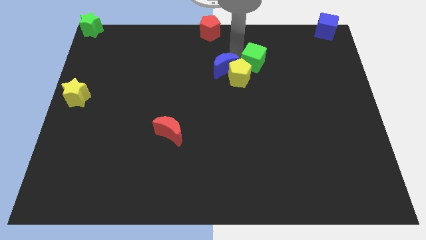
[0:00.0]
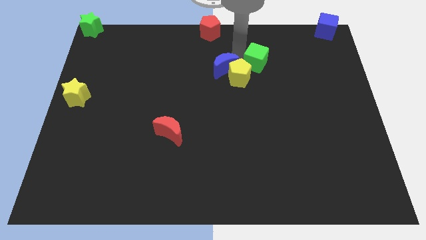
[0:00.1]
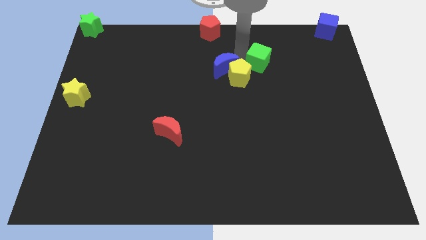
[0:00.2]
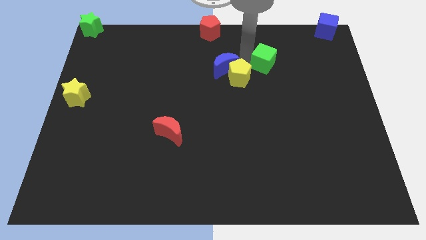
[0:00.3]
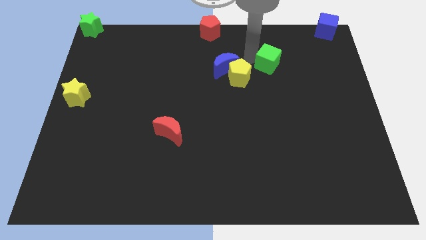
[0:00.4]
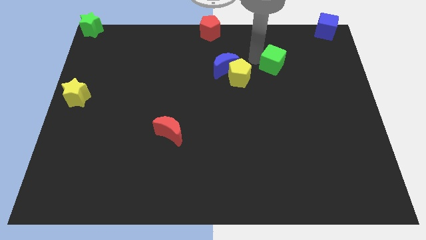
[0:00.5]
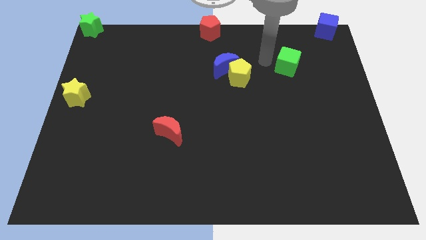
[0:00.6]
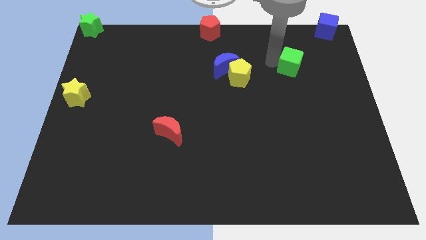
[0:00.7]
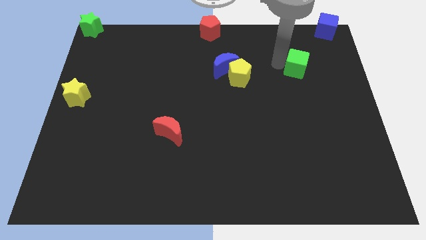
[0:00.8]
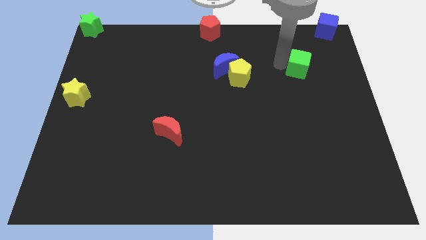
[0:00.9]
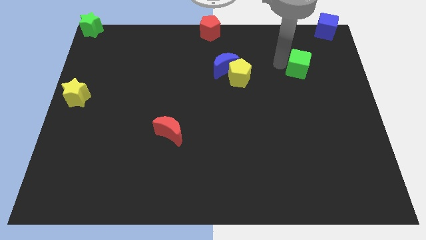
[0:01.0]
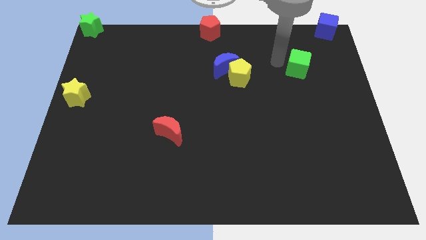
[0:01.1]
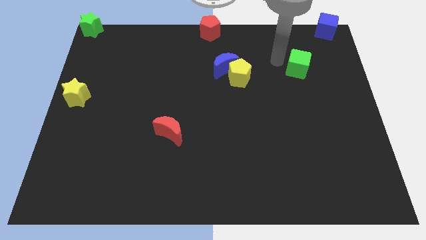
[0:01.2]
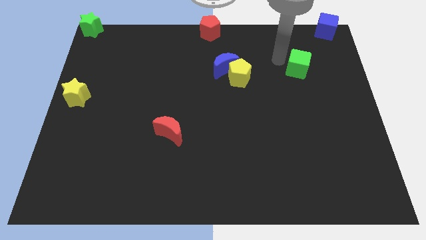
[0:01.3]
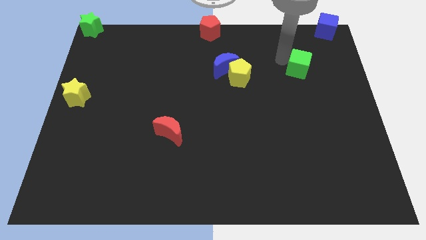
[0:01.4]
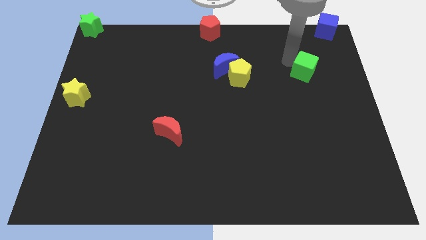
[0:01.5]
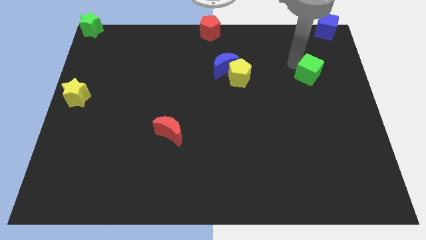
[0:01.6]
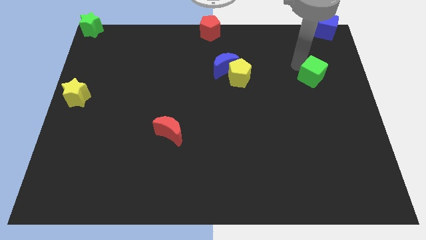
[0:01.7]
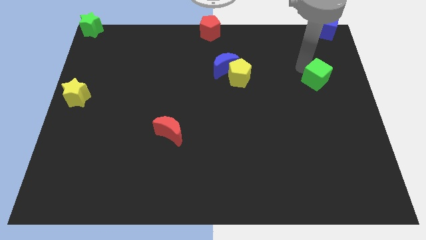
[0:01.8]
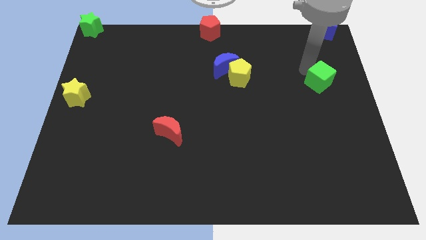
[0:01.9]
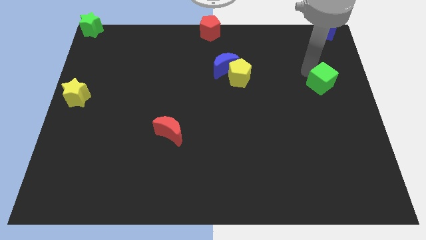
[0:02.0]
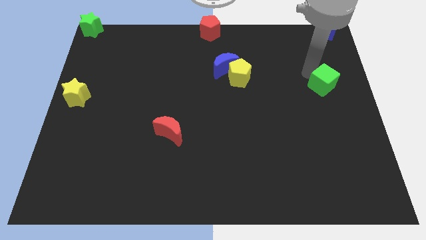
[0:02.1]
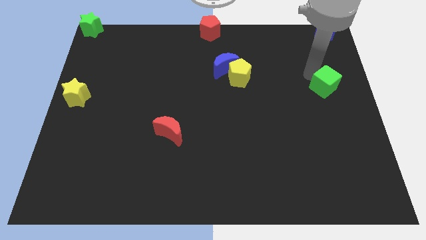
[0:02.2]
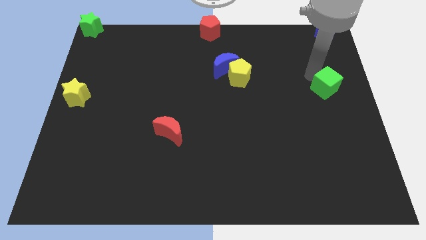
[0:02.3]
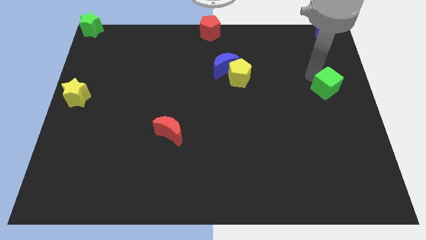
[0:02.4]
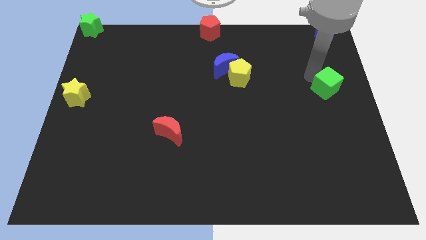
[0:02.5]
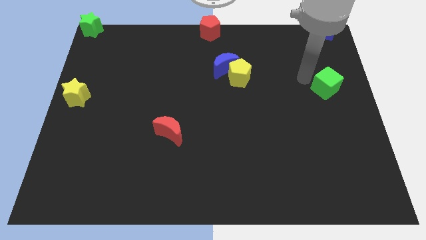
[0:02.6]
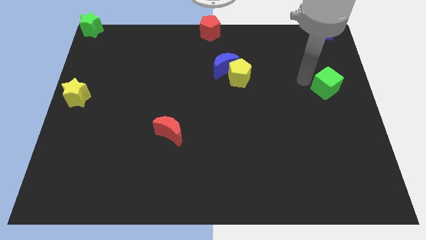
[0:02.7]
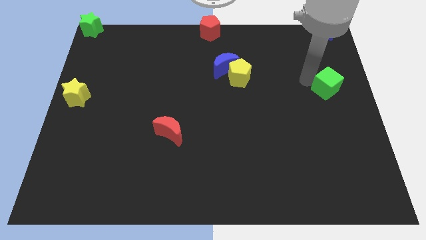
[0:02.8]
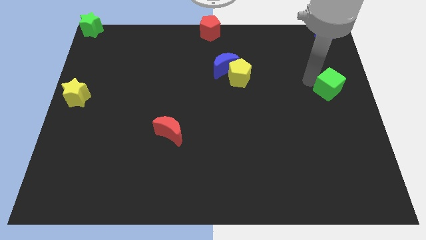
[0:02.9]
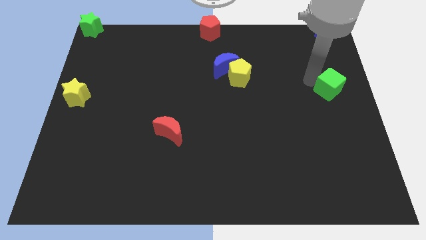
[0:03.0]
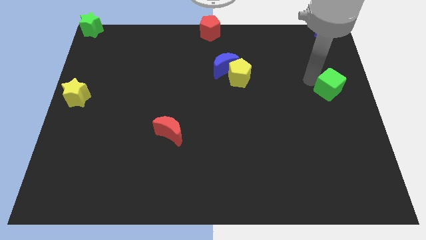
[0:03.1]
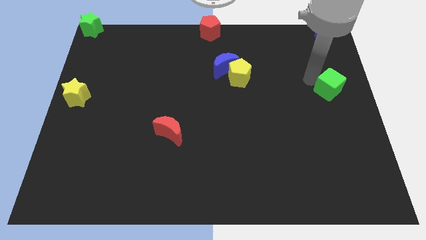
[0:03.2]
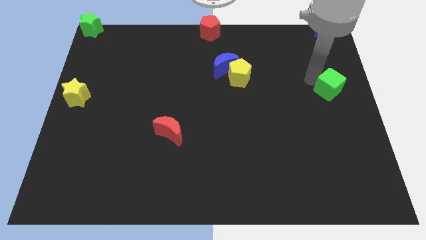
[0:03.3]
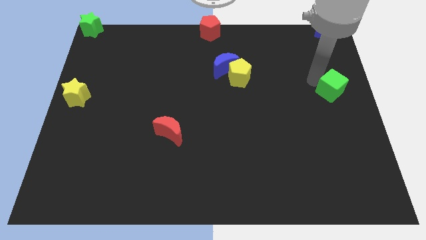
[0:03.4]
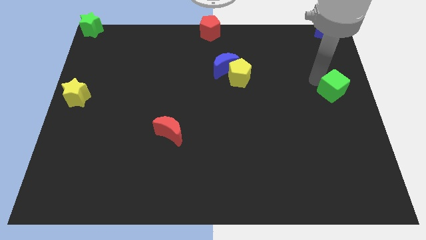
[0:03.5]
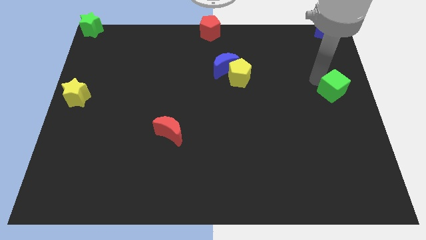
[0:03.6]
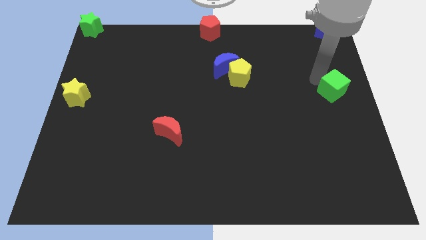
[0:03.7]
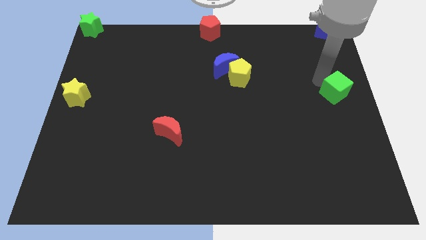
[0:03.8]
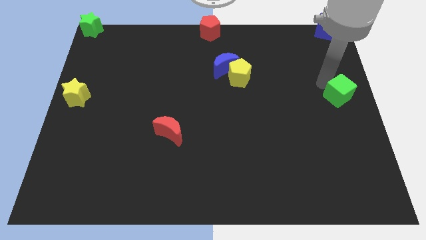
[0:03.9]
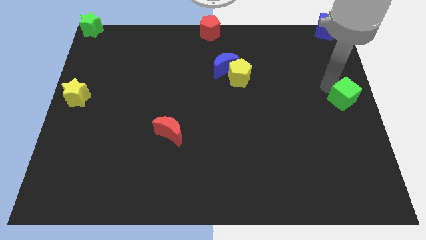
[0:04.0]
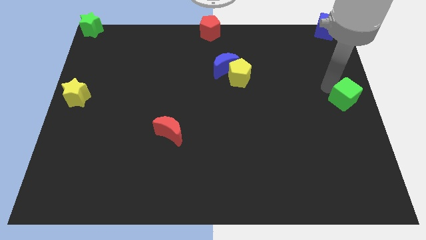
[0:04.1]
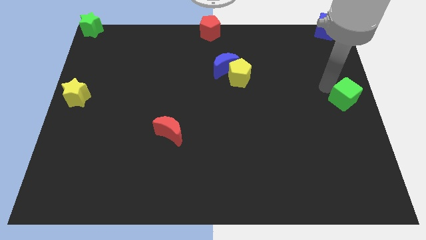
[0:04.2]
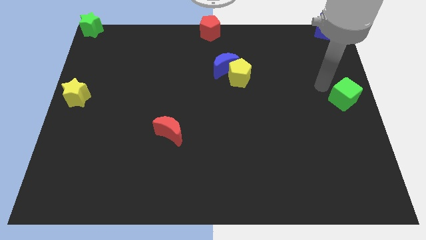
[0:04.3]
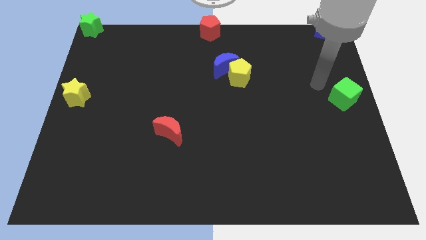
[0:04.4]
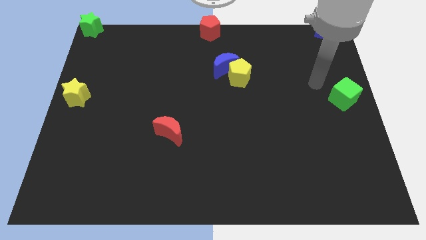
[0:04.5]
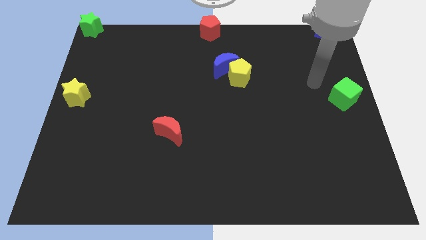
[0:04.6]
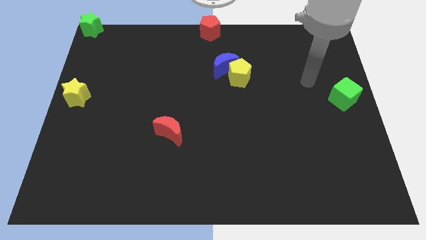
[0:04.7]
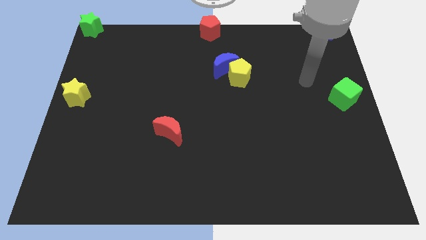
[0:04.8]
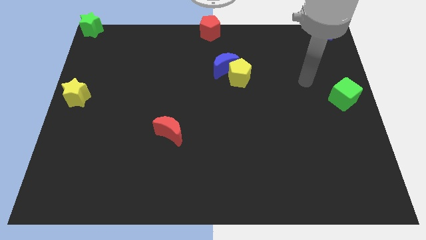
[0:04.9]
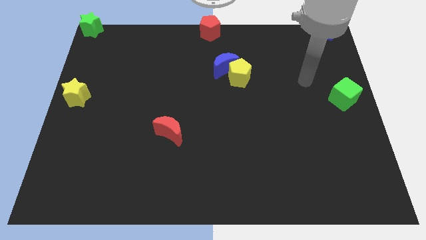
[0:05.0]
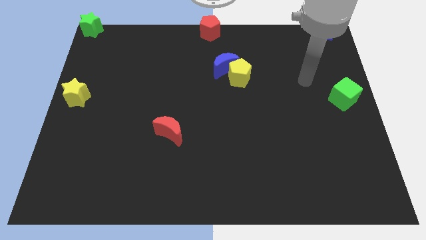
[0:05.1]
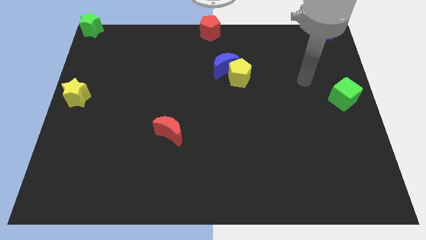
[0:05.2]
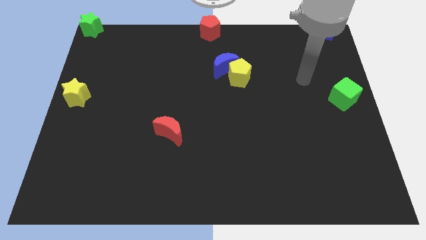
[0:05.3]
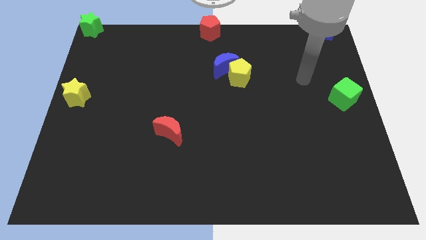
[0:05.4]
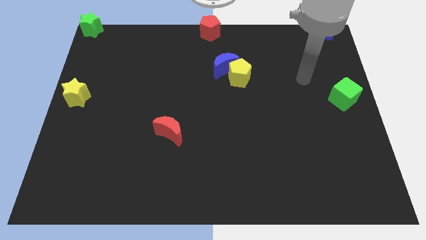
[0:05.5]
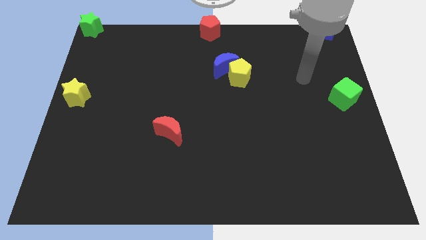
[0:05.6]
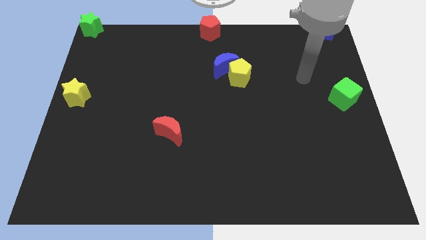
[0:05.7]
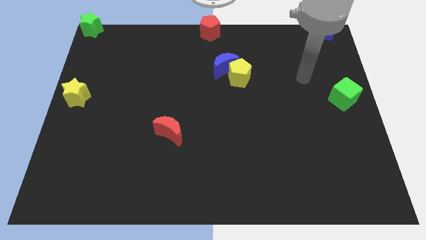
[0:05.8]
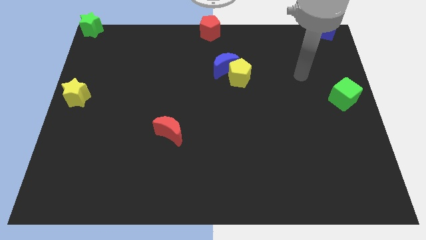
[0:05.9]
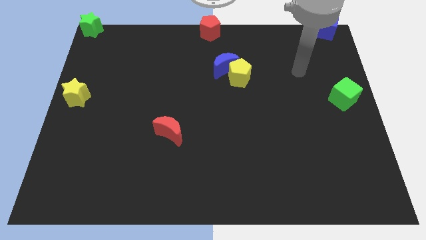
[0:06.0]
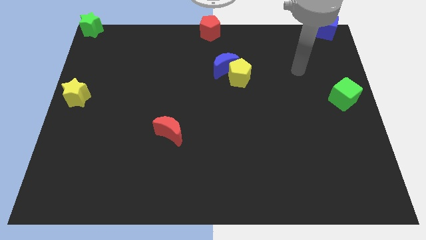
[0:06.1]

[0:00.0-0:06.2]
place the green cube to the middle right of the board

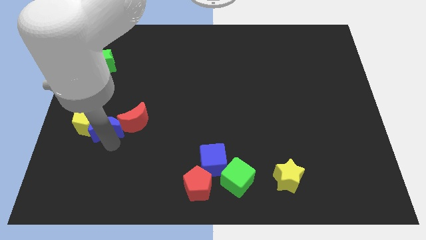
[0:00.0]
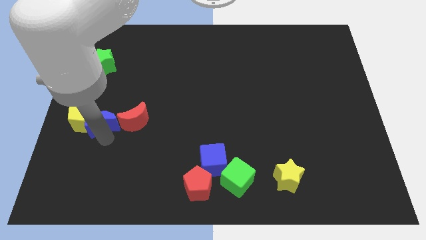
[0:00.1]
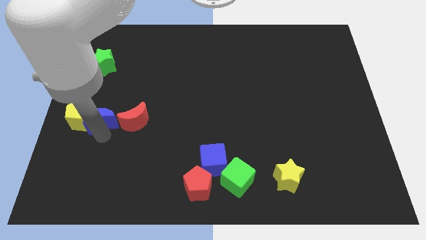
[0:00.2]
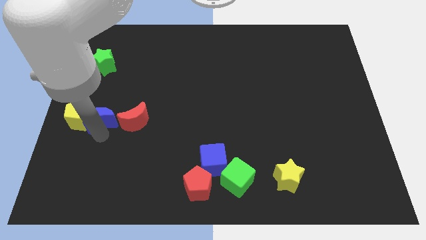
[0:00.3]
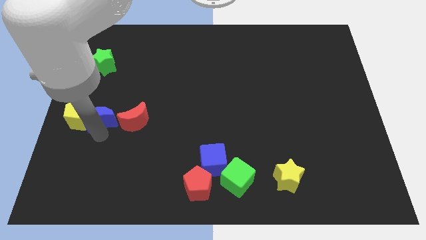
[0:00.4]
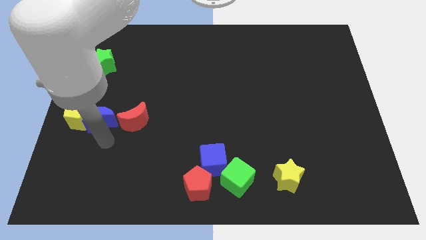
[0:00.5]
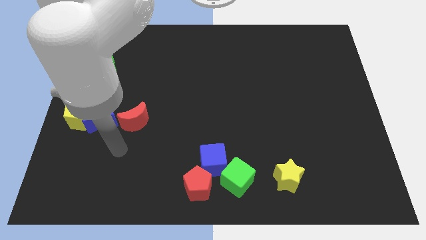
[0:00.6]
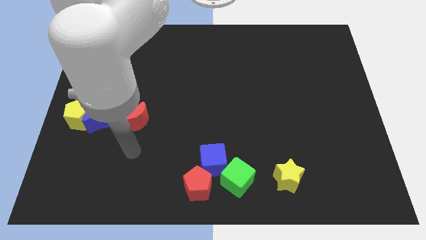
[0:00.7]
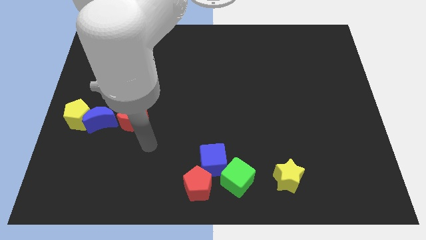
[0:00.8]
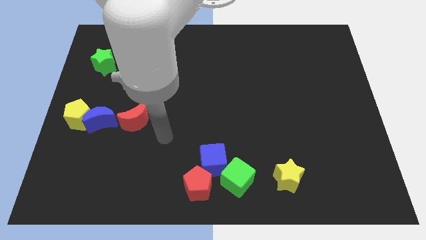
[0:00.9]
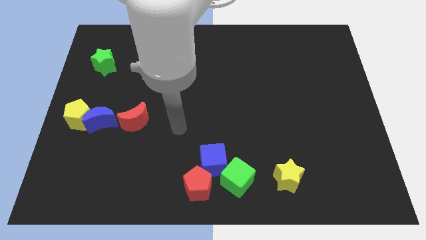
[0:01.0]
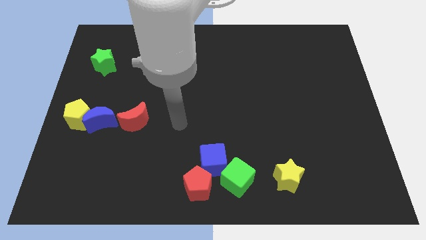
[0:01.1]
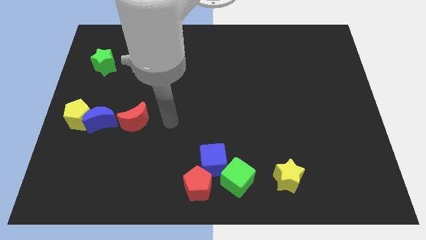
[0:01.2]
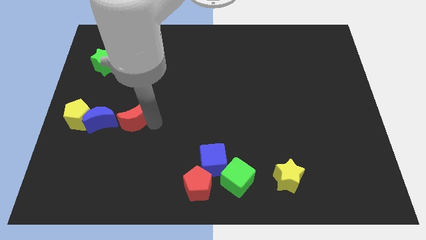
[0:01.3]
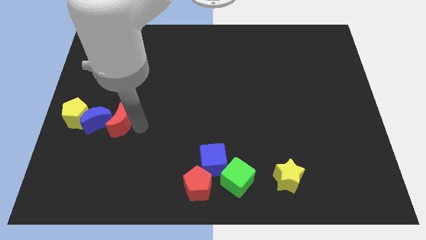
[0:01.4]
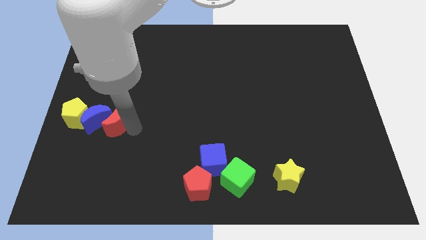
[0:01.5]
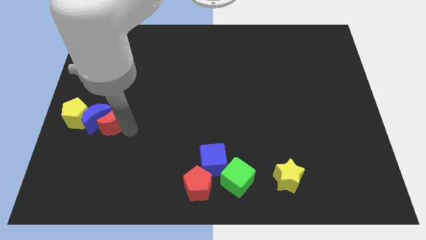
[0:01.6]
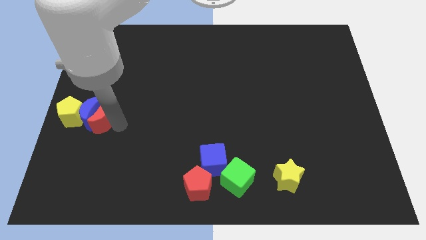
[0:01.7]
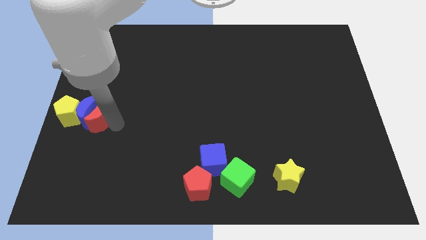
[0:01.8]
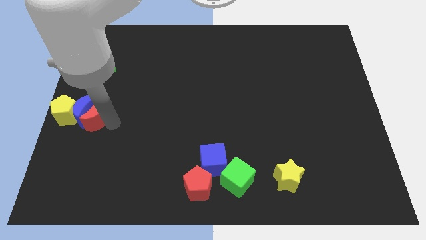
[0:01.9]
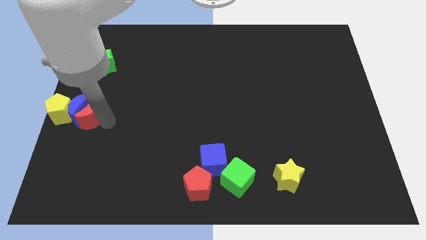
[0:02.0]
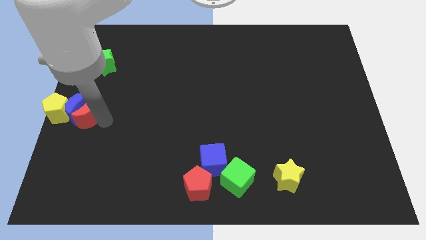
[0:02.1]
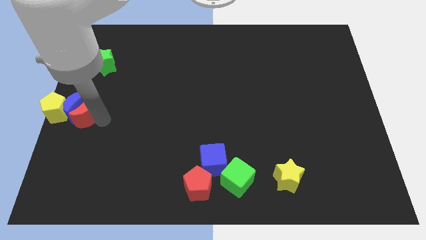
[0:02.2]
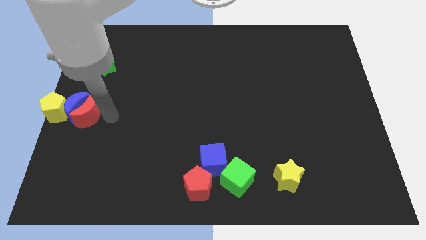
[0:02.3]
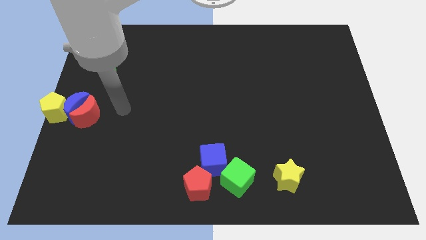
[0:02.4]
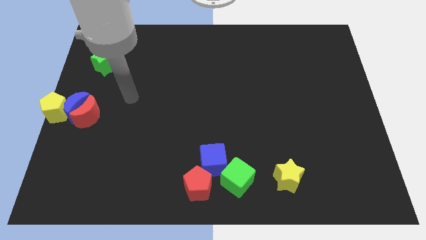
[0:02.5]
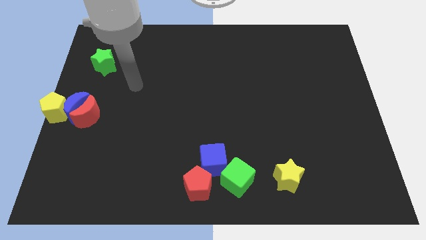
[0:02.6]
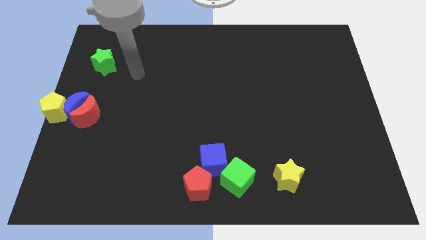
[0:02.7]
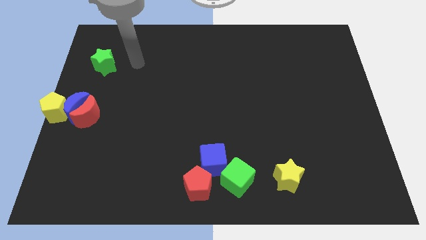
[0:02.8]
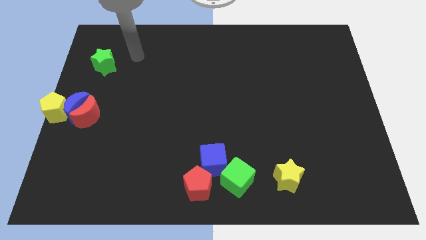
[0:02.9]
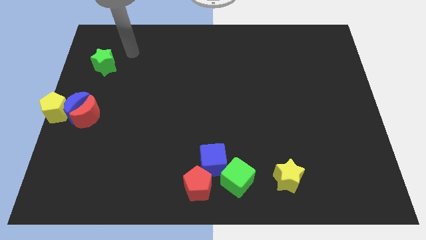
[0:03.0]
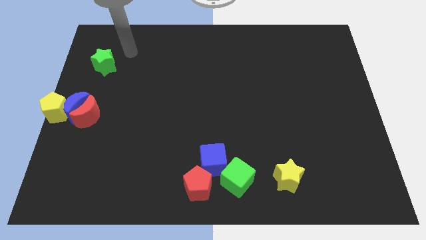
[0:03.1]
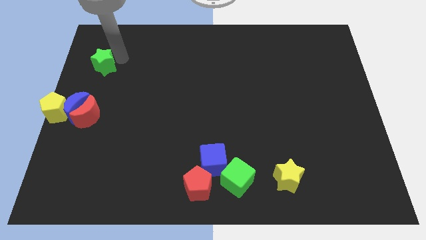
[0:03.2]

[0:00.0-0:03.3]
place blue moon red moon and yellow pentgaon at the left center of the table
